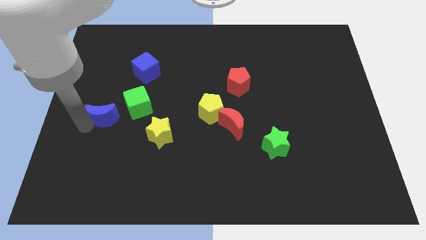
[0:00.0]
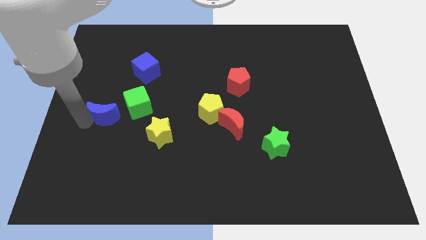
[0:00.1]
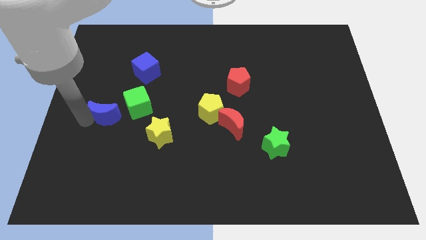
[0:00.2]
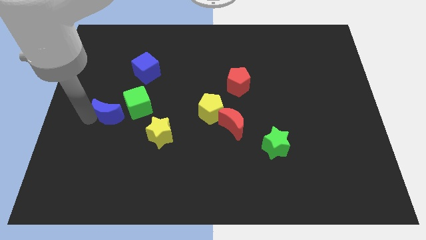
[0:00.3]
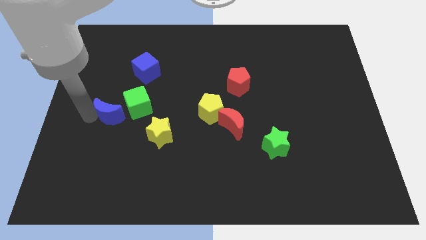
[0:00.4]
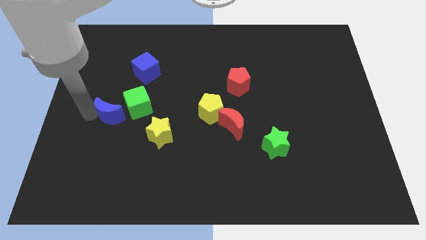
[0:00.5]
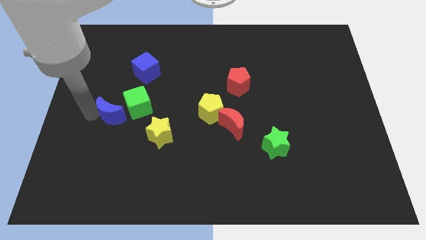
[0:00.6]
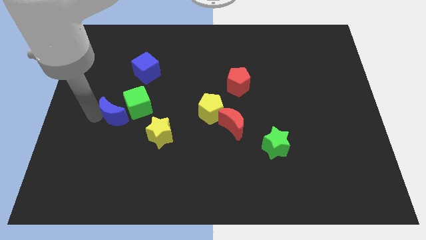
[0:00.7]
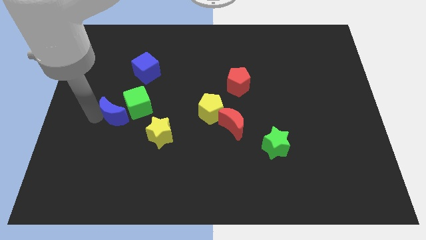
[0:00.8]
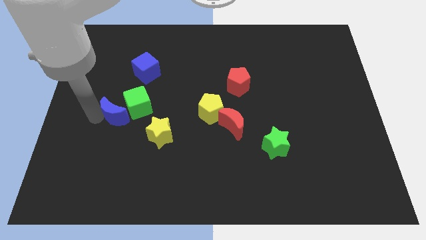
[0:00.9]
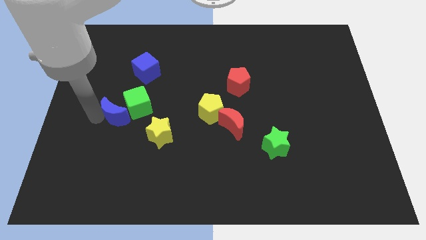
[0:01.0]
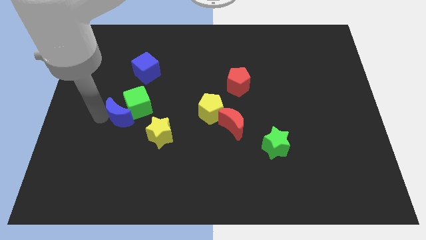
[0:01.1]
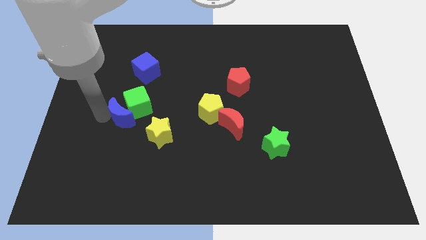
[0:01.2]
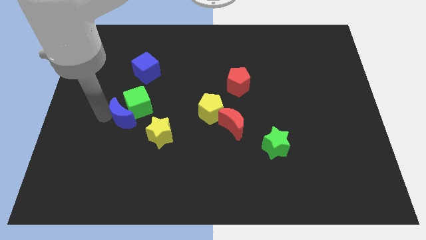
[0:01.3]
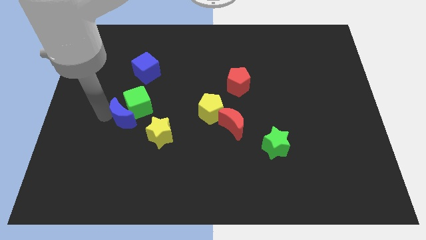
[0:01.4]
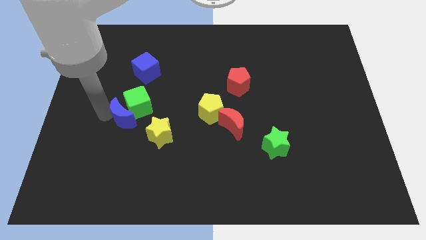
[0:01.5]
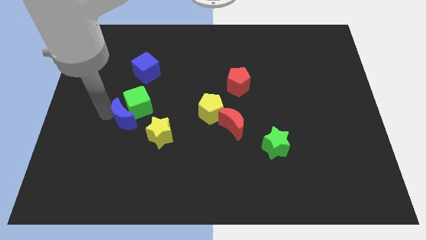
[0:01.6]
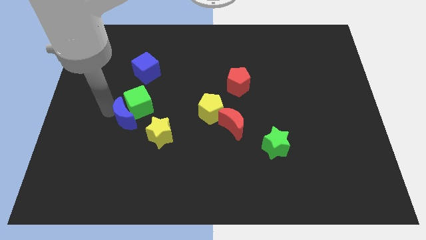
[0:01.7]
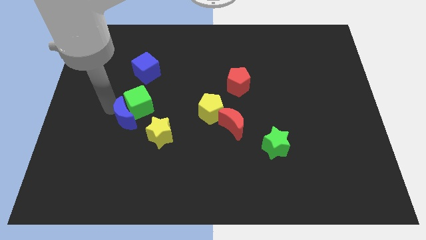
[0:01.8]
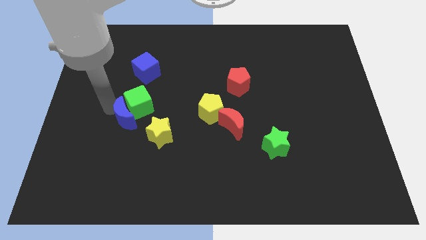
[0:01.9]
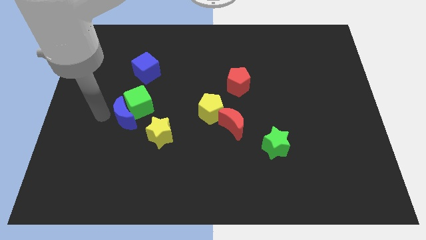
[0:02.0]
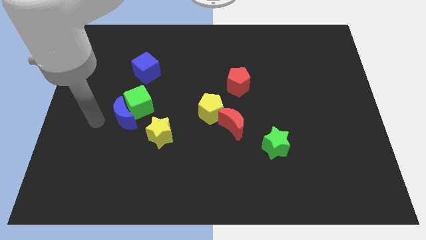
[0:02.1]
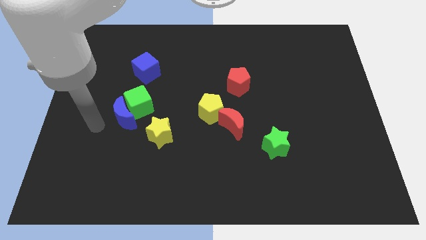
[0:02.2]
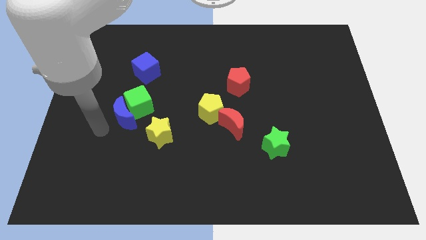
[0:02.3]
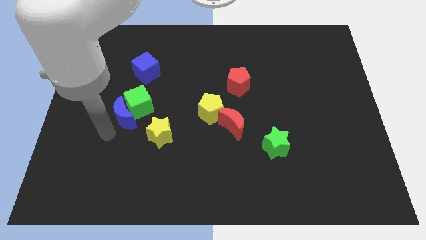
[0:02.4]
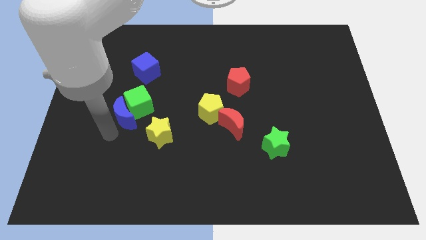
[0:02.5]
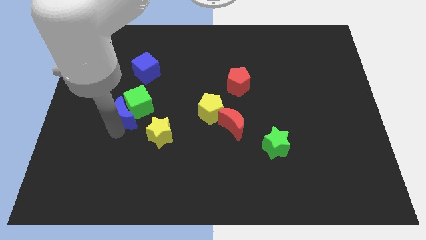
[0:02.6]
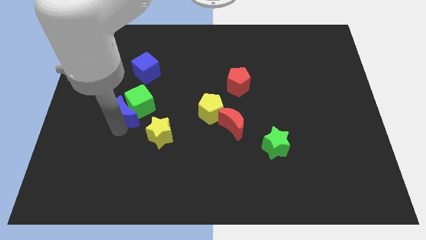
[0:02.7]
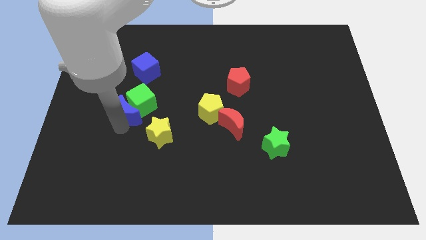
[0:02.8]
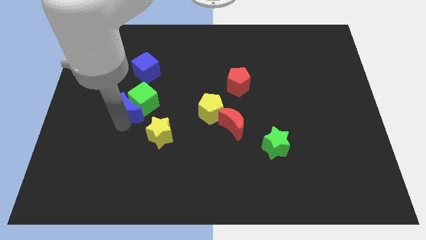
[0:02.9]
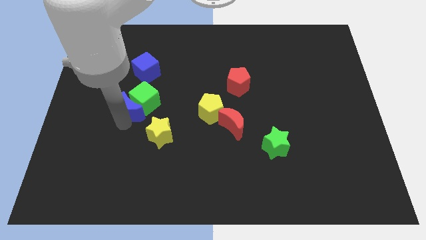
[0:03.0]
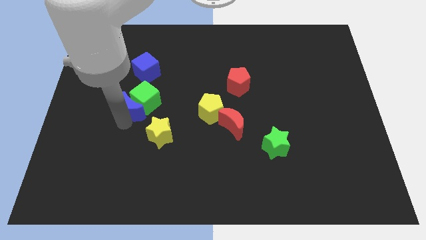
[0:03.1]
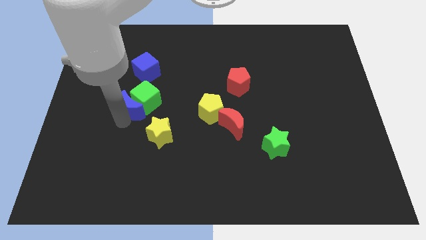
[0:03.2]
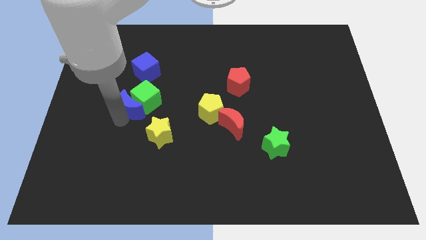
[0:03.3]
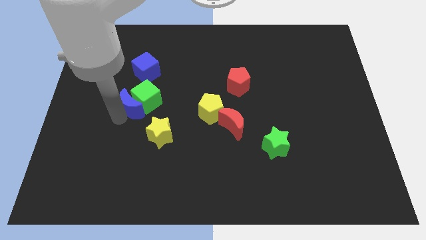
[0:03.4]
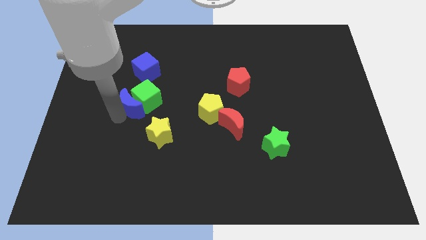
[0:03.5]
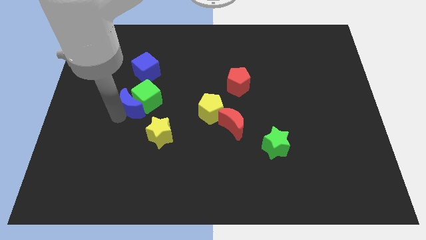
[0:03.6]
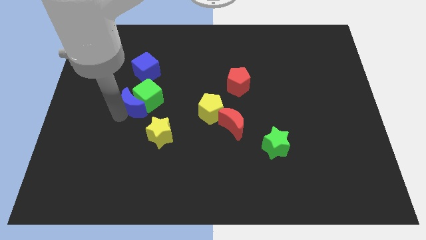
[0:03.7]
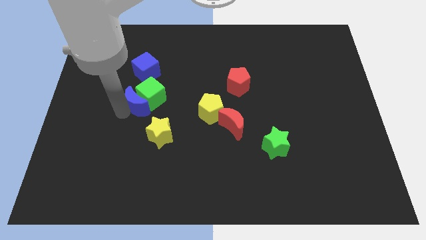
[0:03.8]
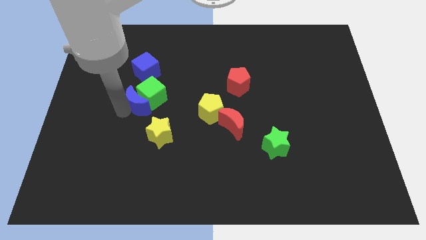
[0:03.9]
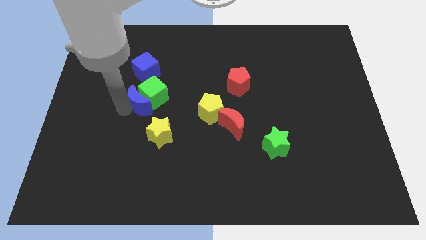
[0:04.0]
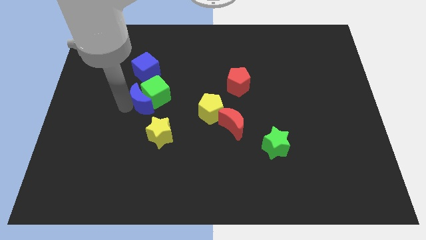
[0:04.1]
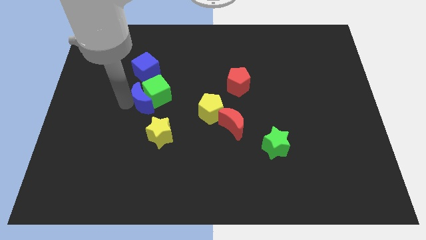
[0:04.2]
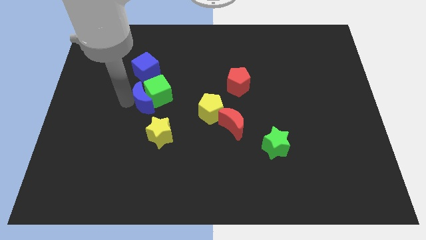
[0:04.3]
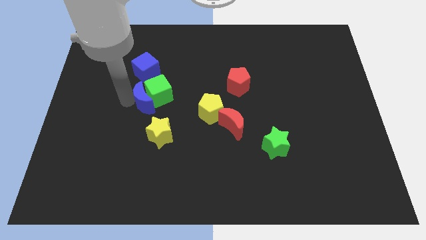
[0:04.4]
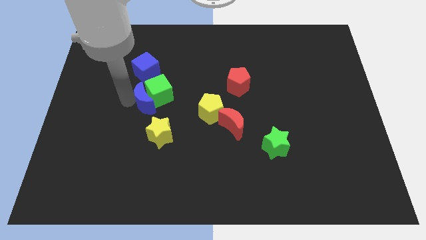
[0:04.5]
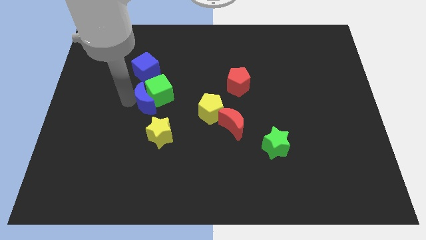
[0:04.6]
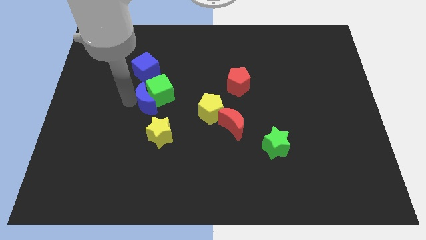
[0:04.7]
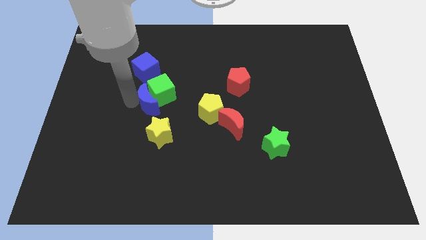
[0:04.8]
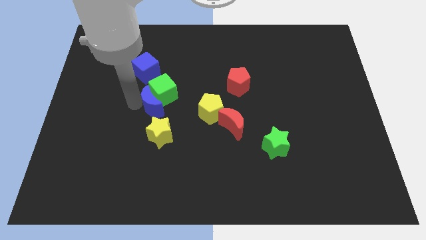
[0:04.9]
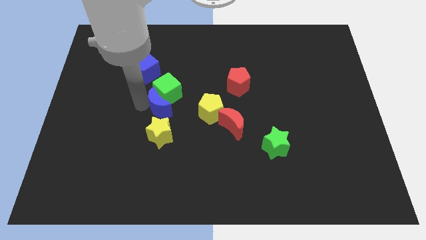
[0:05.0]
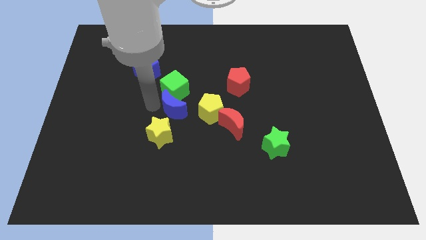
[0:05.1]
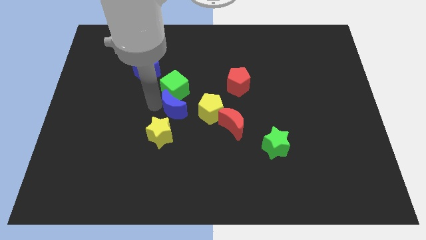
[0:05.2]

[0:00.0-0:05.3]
move the blue crescent into the green cube towards the center of the board

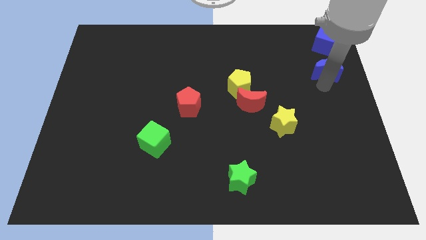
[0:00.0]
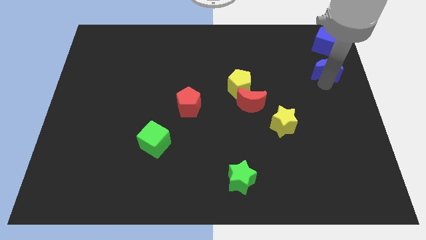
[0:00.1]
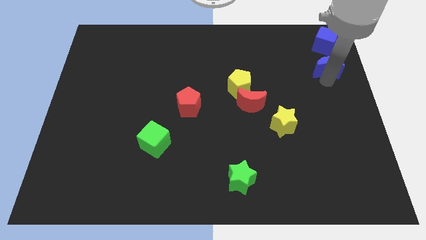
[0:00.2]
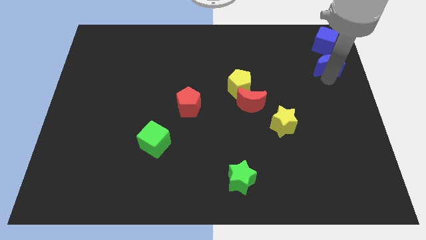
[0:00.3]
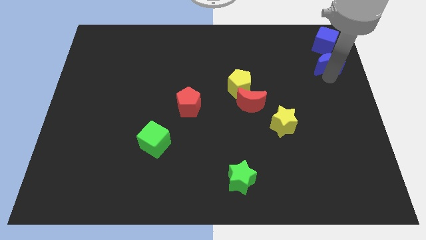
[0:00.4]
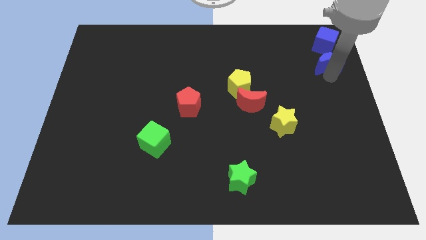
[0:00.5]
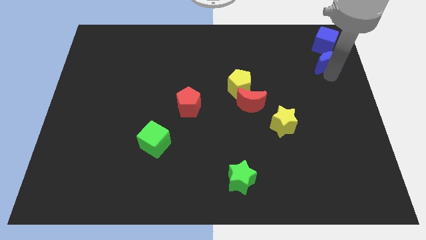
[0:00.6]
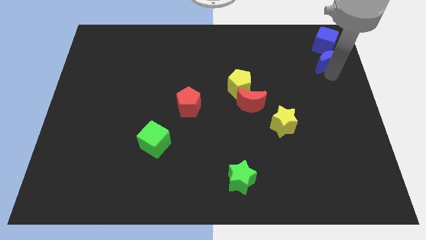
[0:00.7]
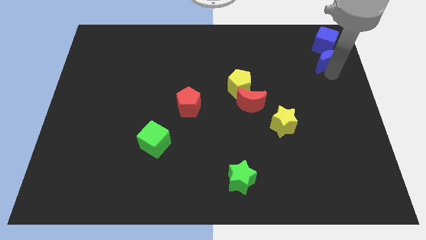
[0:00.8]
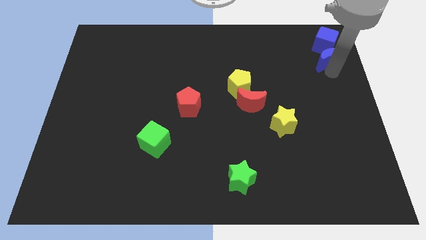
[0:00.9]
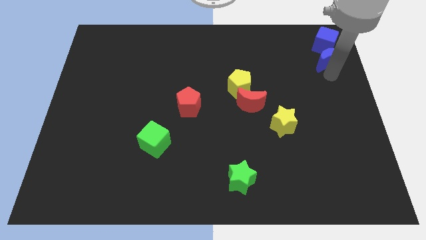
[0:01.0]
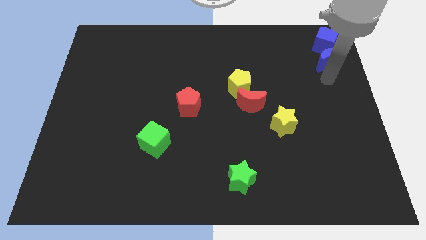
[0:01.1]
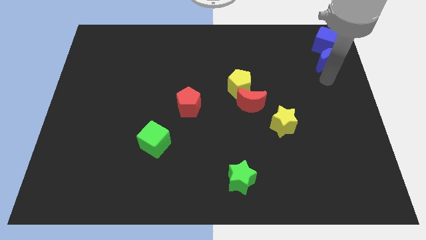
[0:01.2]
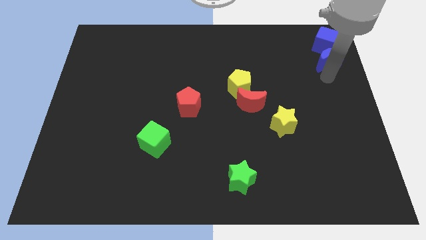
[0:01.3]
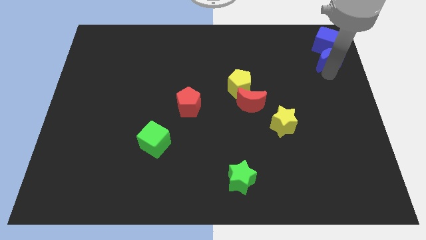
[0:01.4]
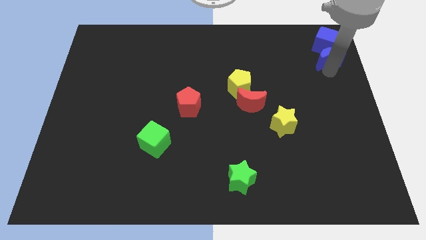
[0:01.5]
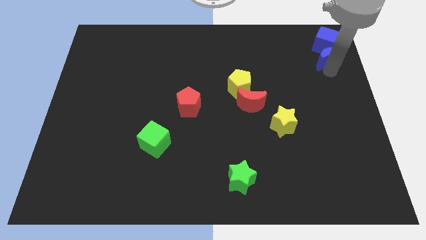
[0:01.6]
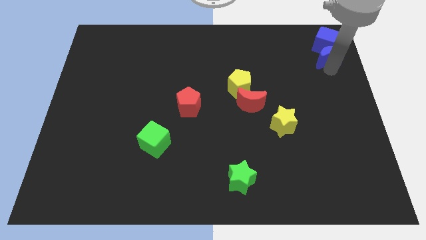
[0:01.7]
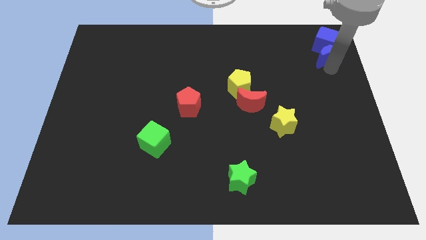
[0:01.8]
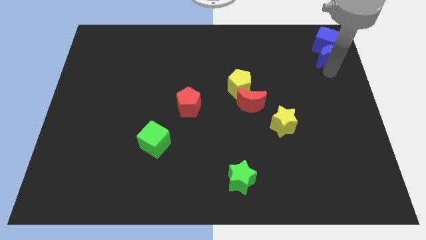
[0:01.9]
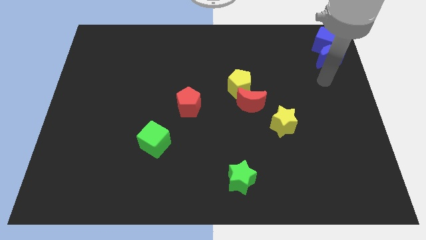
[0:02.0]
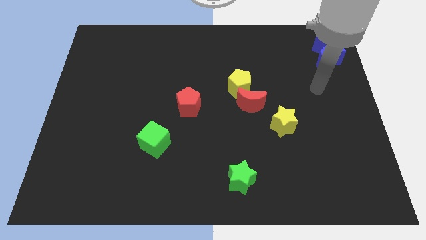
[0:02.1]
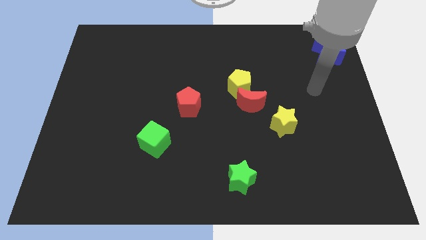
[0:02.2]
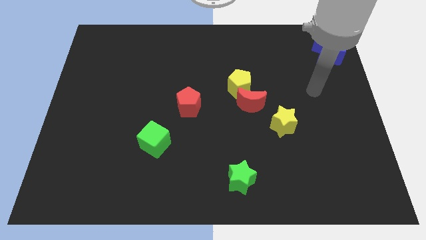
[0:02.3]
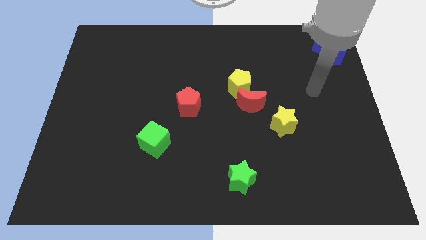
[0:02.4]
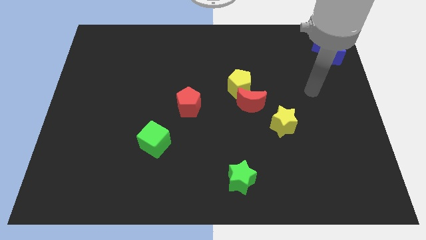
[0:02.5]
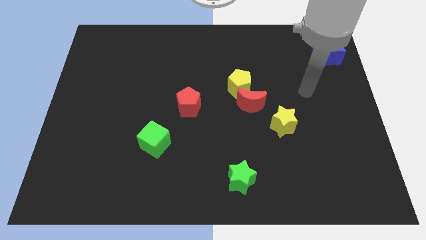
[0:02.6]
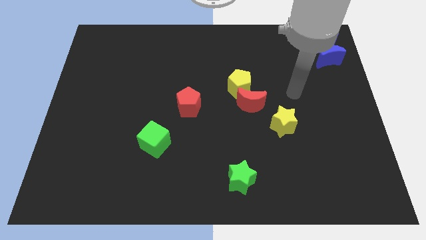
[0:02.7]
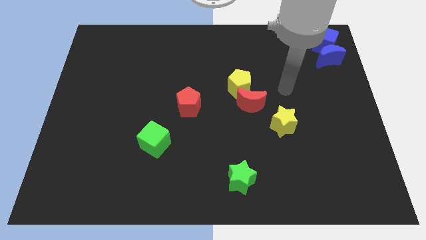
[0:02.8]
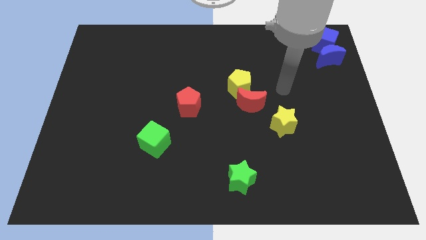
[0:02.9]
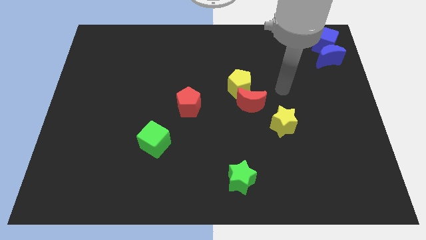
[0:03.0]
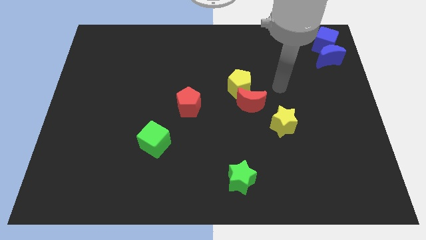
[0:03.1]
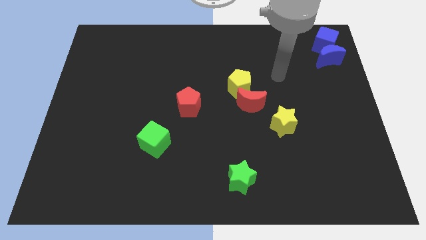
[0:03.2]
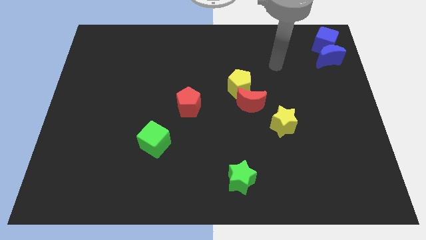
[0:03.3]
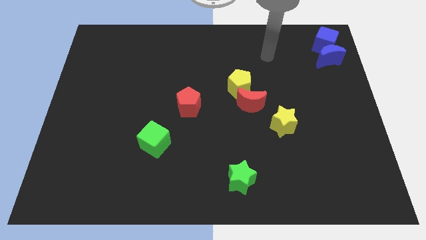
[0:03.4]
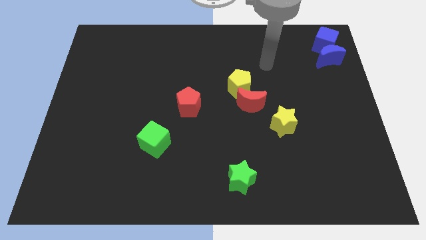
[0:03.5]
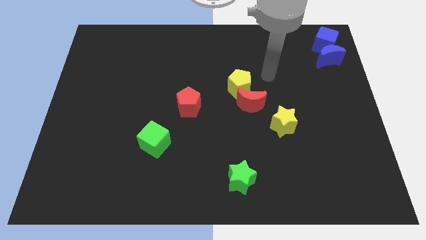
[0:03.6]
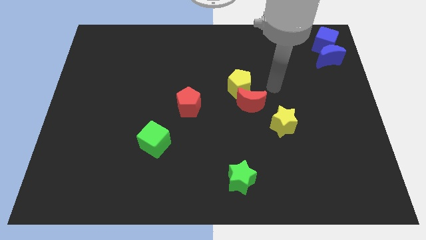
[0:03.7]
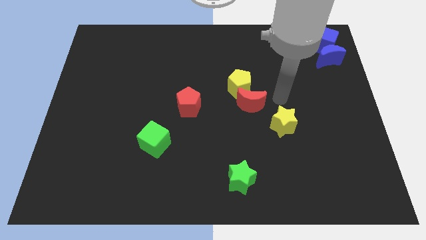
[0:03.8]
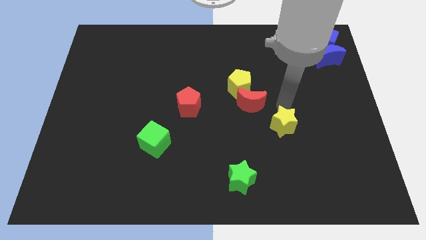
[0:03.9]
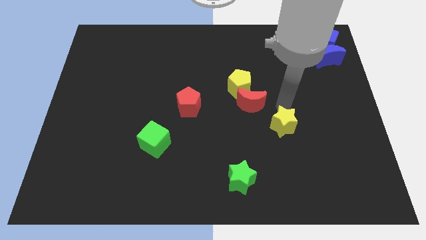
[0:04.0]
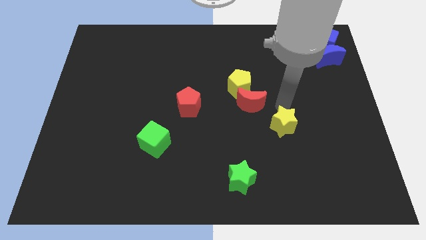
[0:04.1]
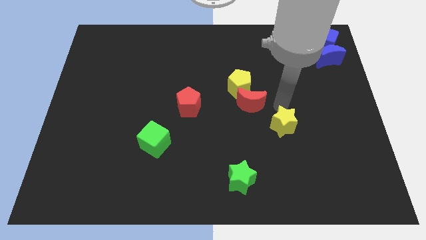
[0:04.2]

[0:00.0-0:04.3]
place blue crescent below the blue cube
